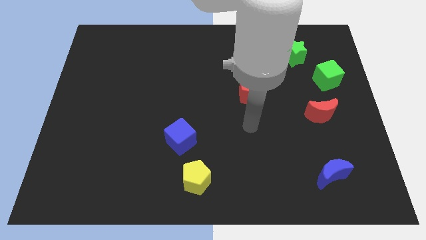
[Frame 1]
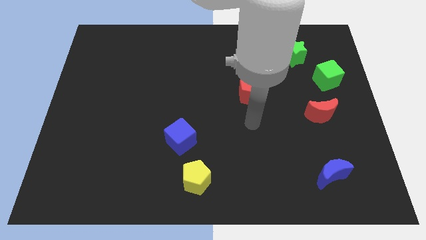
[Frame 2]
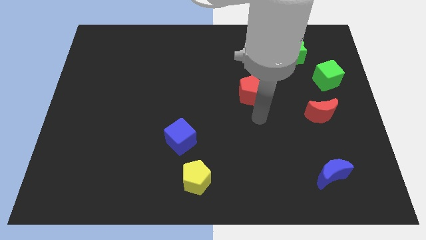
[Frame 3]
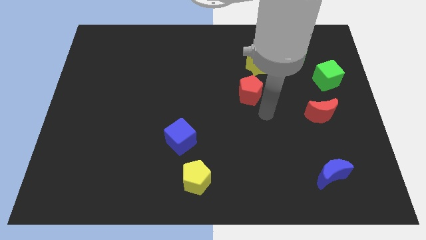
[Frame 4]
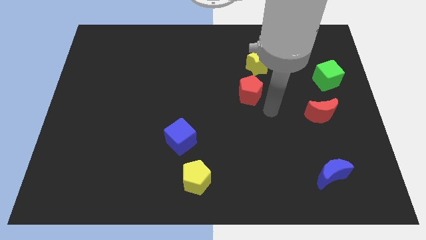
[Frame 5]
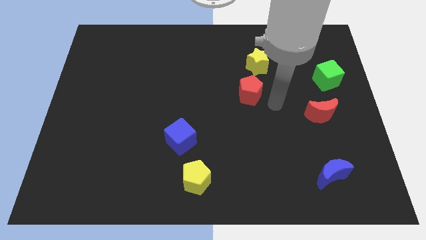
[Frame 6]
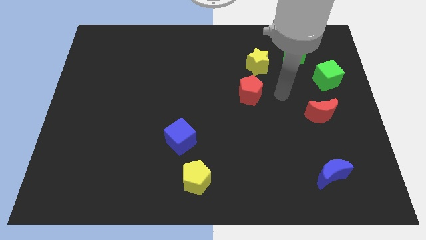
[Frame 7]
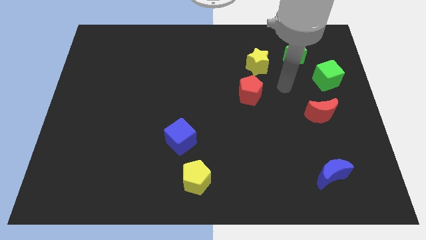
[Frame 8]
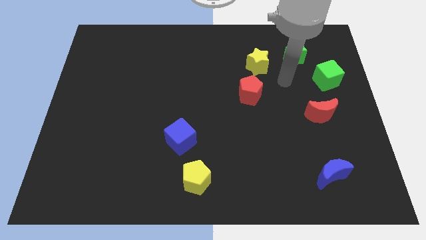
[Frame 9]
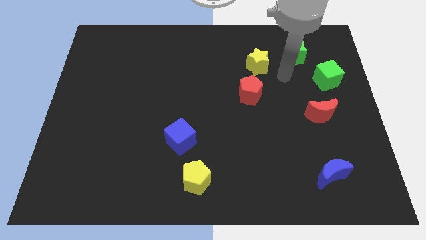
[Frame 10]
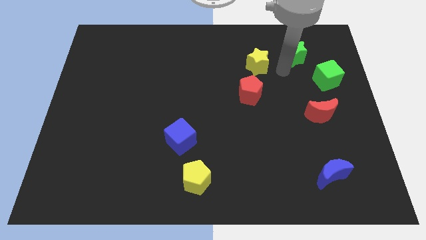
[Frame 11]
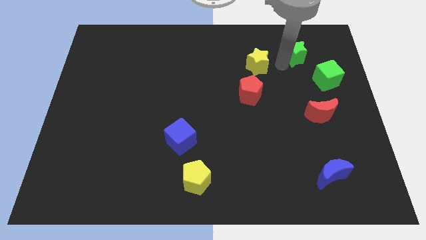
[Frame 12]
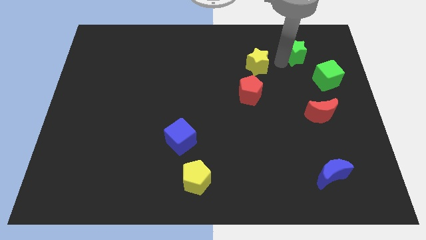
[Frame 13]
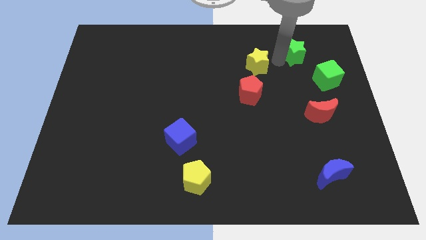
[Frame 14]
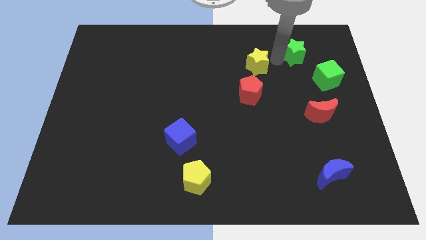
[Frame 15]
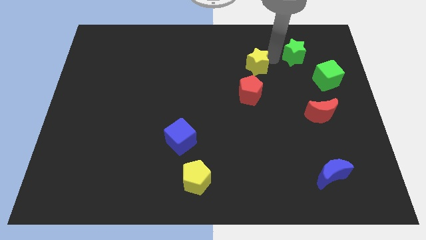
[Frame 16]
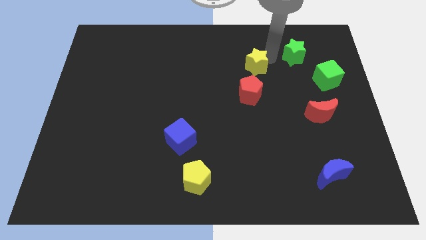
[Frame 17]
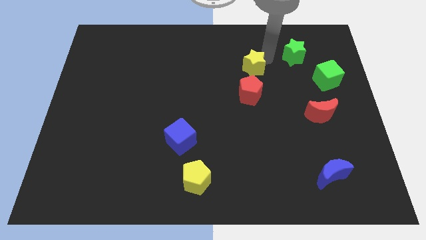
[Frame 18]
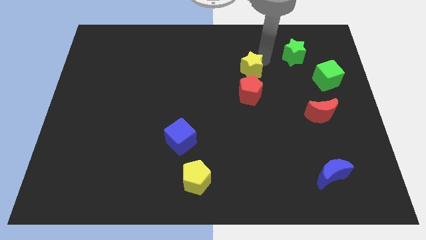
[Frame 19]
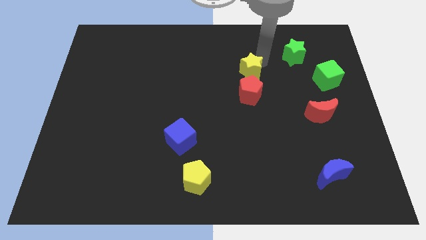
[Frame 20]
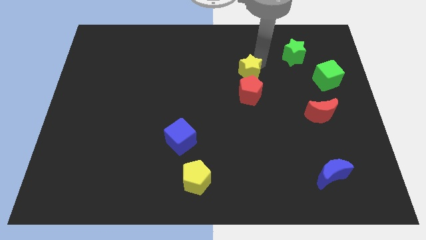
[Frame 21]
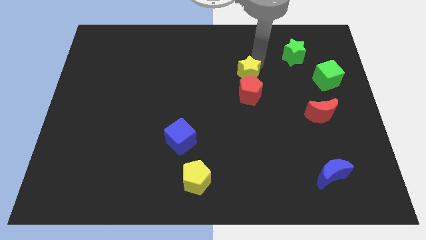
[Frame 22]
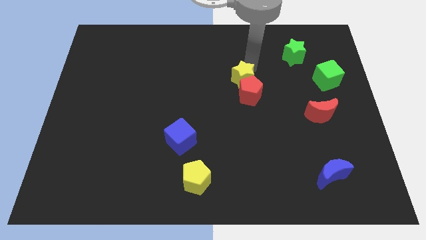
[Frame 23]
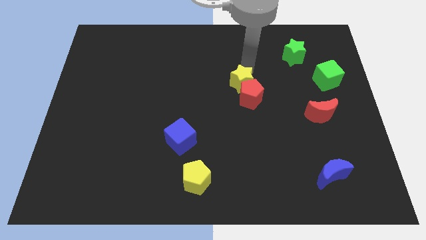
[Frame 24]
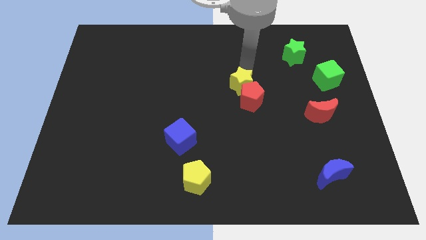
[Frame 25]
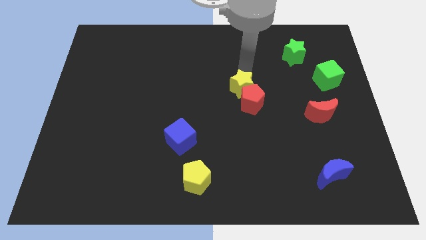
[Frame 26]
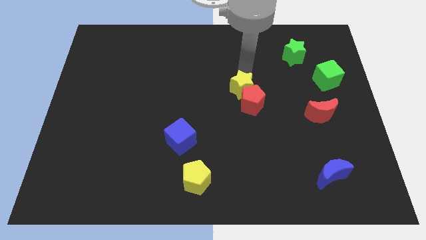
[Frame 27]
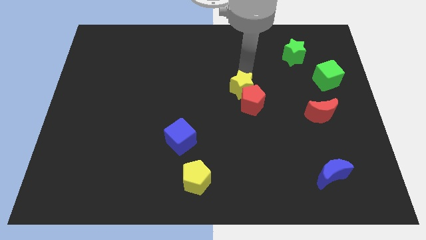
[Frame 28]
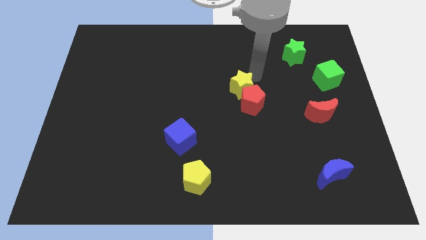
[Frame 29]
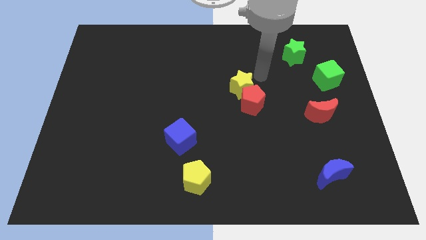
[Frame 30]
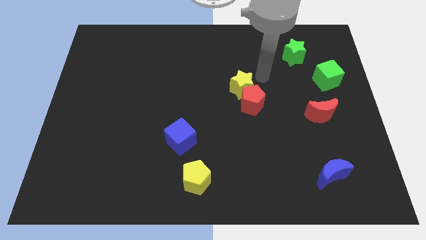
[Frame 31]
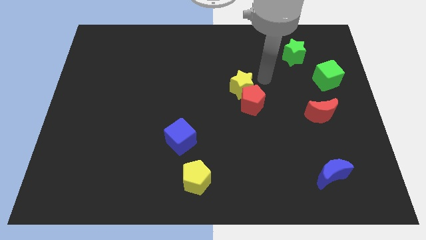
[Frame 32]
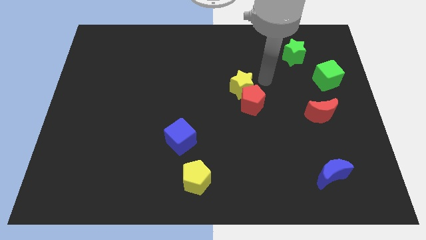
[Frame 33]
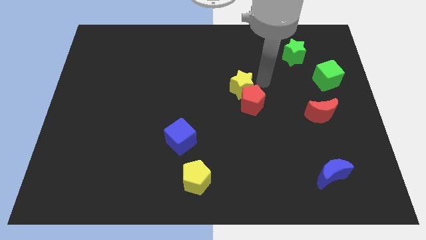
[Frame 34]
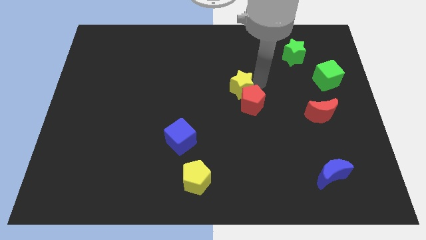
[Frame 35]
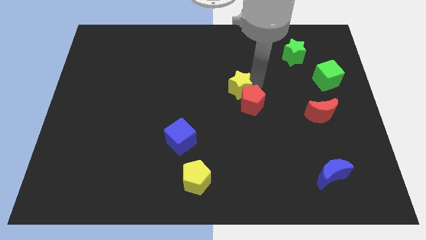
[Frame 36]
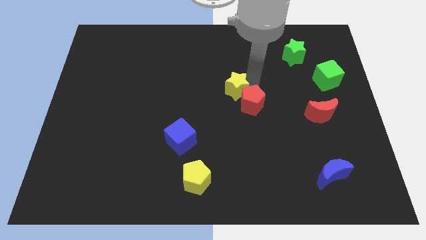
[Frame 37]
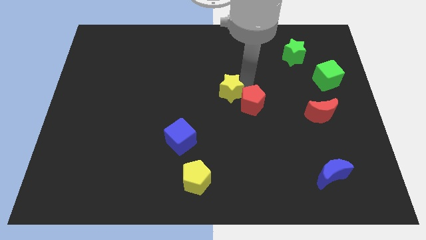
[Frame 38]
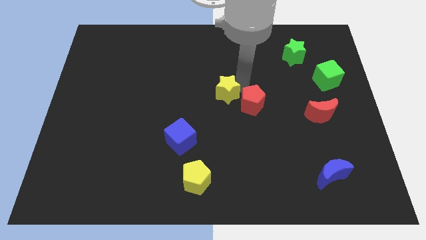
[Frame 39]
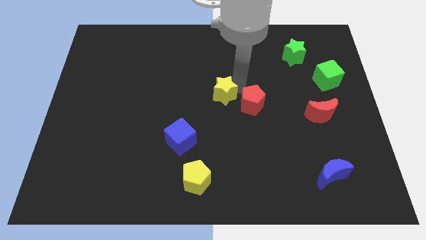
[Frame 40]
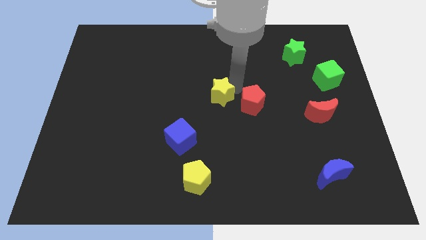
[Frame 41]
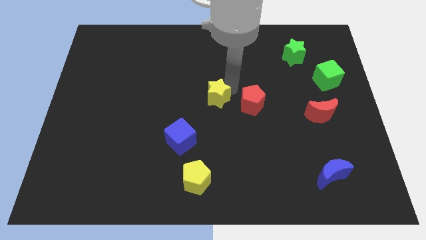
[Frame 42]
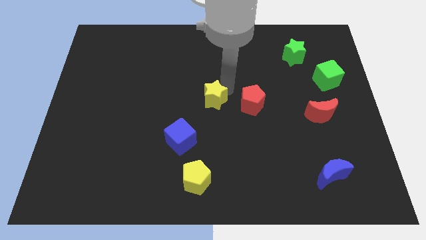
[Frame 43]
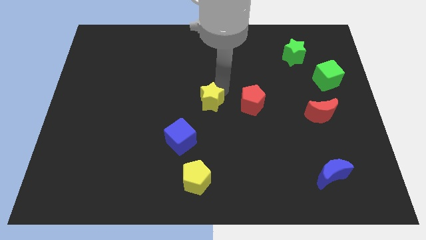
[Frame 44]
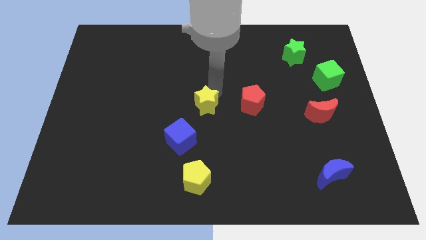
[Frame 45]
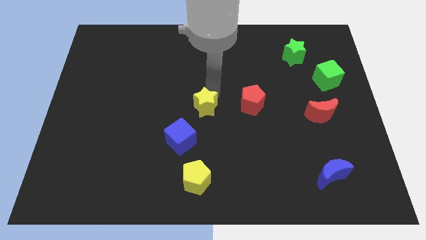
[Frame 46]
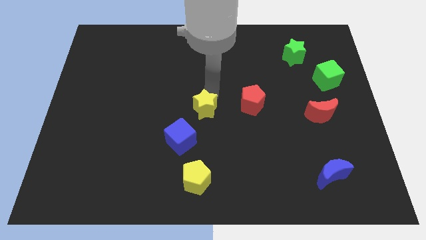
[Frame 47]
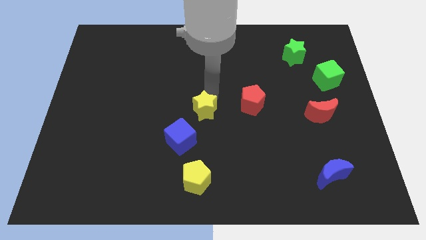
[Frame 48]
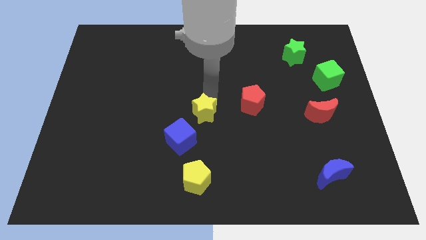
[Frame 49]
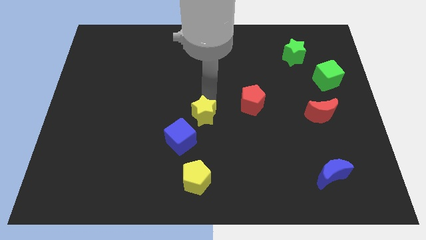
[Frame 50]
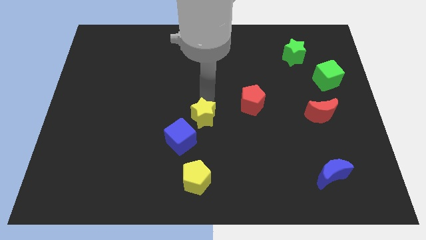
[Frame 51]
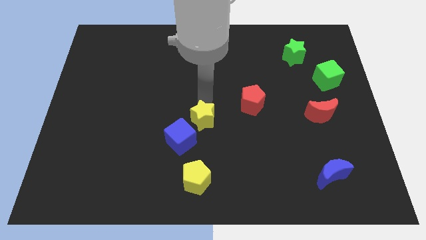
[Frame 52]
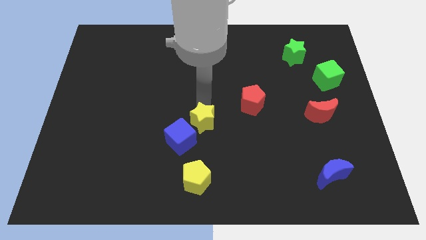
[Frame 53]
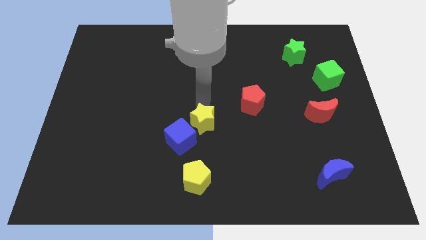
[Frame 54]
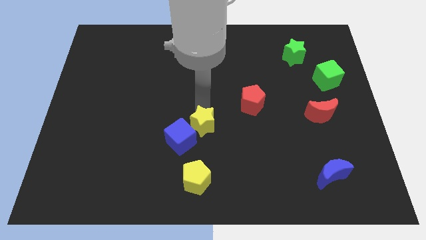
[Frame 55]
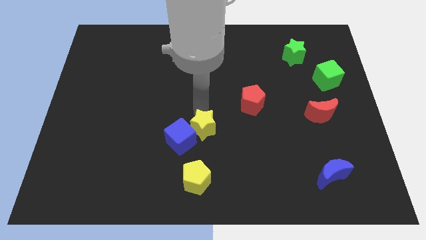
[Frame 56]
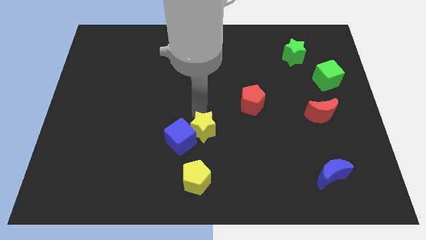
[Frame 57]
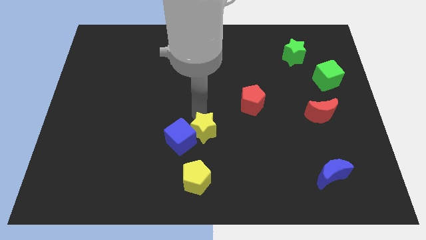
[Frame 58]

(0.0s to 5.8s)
slide the yellow star to the blue cube

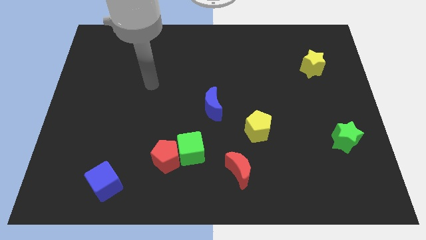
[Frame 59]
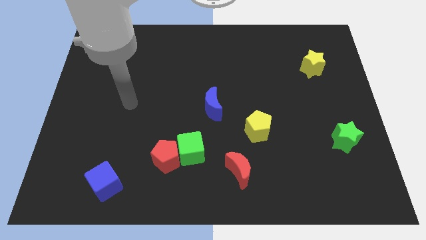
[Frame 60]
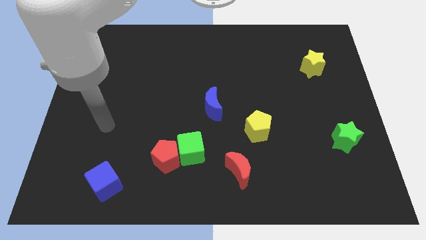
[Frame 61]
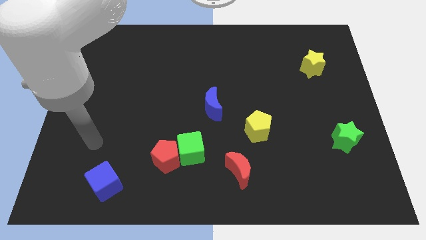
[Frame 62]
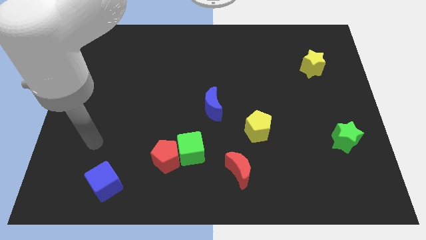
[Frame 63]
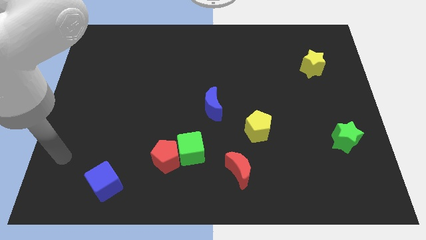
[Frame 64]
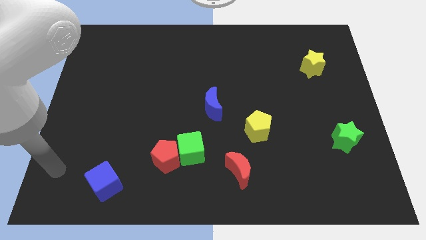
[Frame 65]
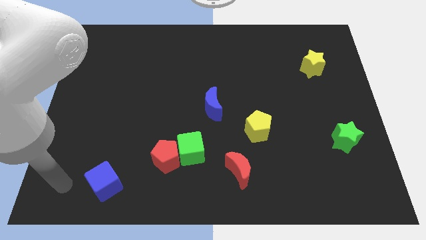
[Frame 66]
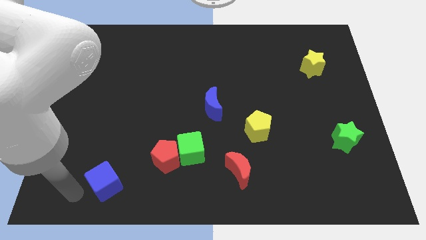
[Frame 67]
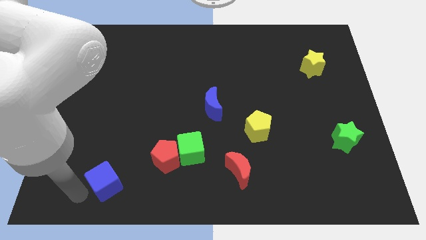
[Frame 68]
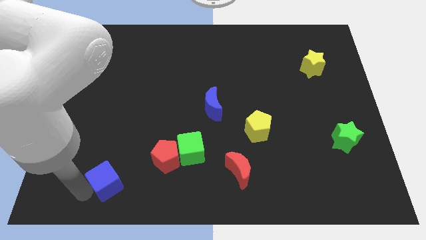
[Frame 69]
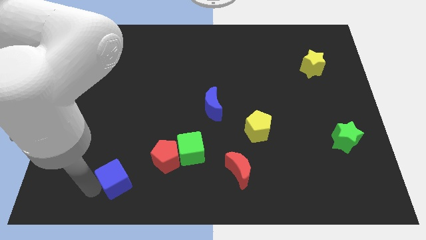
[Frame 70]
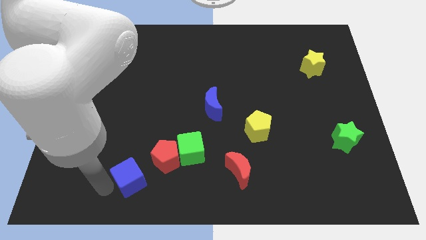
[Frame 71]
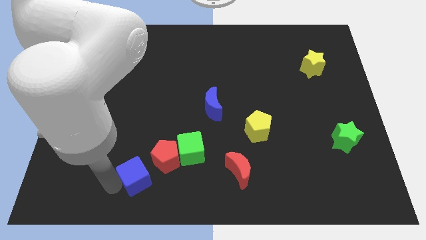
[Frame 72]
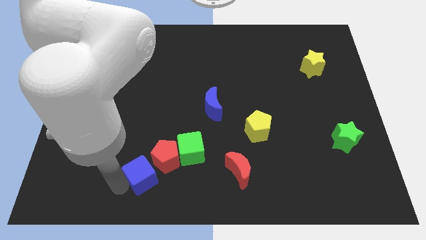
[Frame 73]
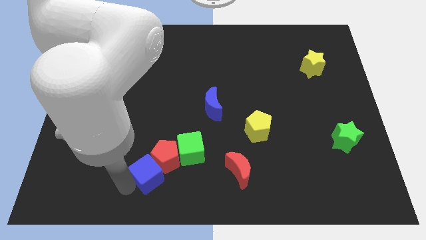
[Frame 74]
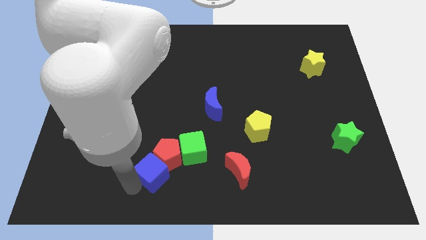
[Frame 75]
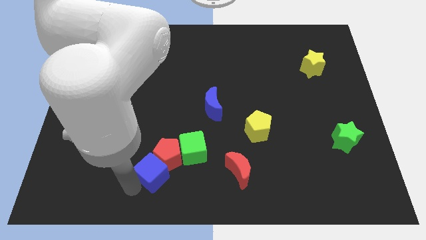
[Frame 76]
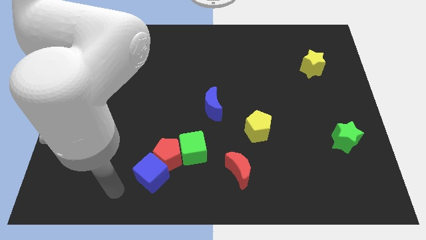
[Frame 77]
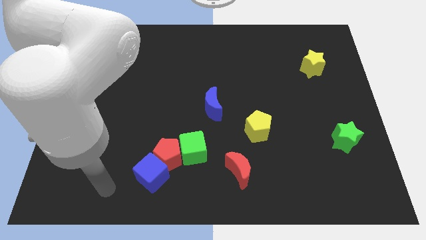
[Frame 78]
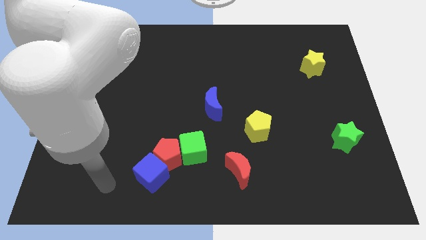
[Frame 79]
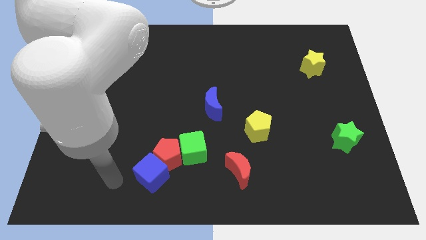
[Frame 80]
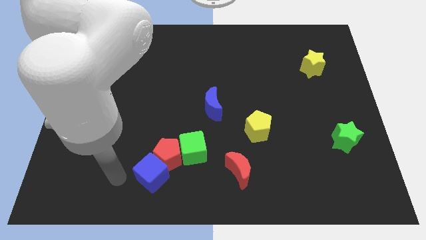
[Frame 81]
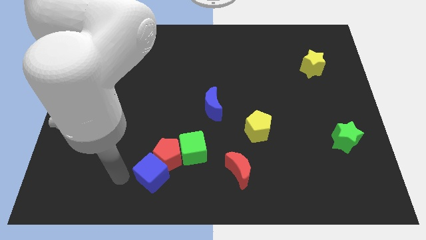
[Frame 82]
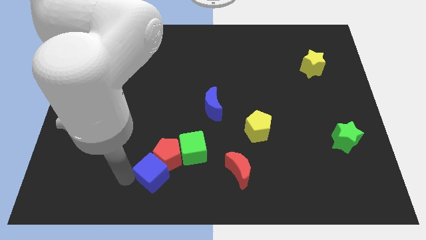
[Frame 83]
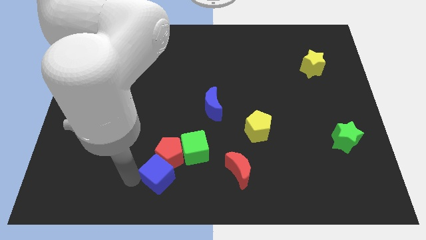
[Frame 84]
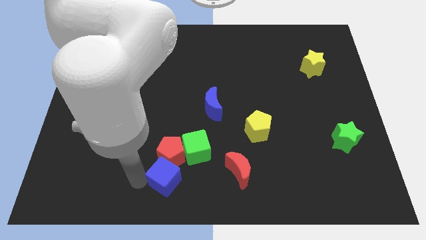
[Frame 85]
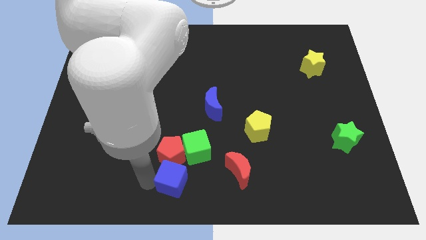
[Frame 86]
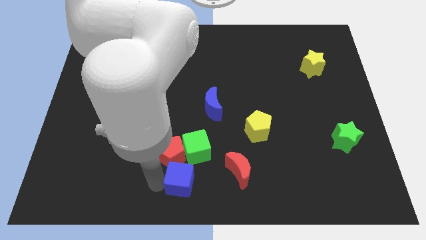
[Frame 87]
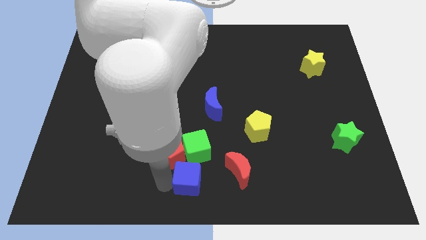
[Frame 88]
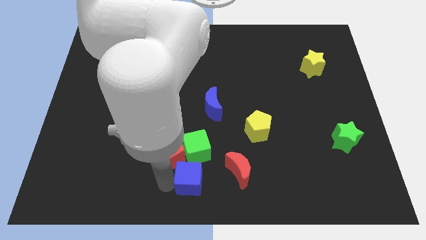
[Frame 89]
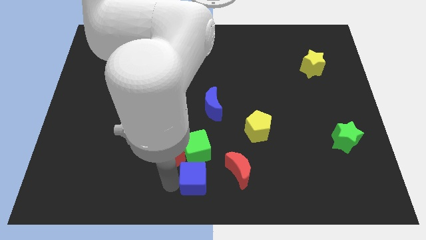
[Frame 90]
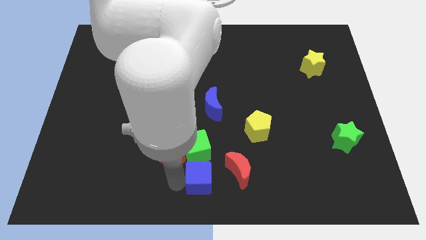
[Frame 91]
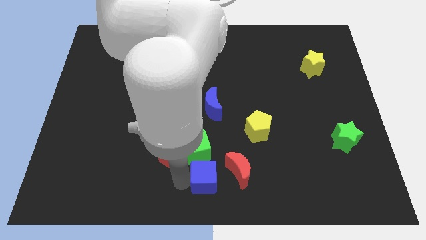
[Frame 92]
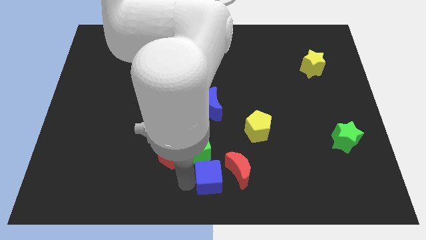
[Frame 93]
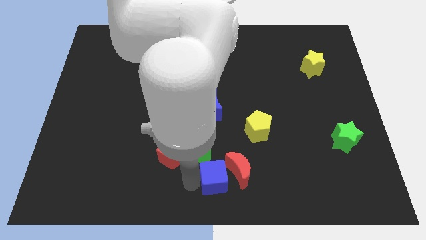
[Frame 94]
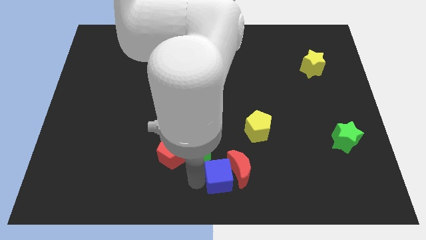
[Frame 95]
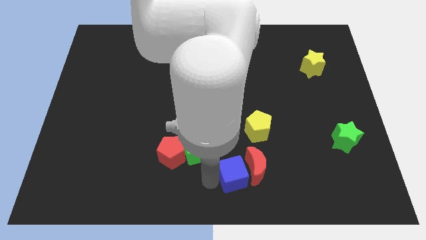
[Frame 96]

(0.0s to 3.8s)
put the blue cube to the red moon
